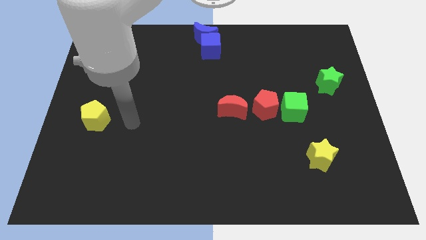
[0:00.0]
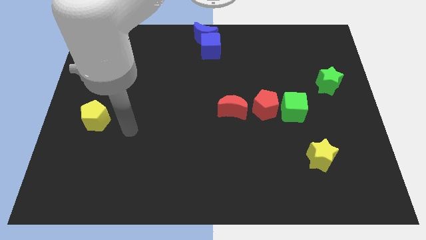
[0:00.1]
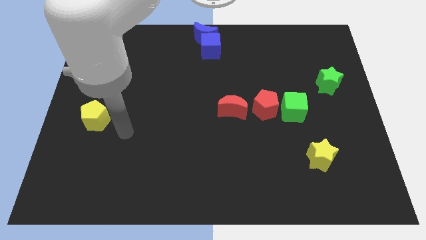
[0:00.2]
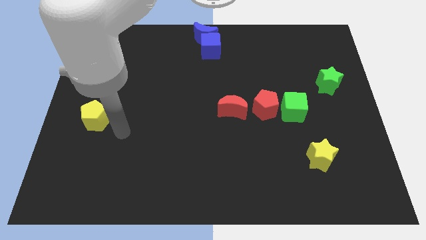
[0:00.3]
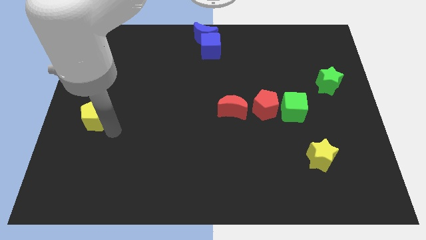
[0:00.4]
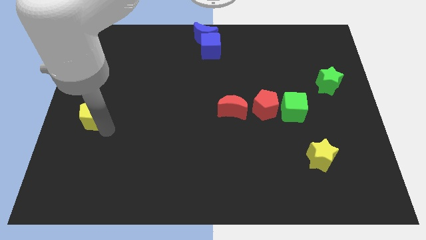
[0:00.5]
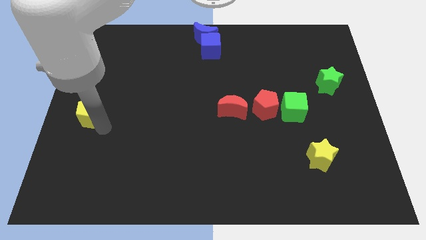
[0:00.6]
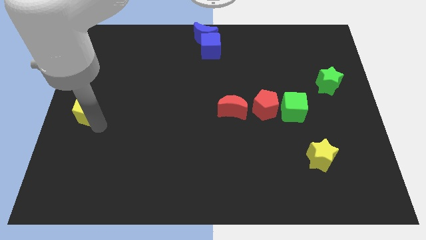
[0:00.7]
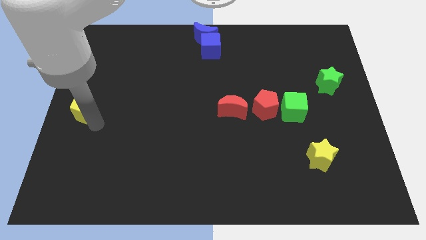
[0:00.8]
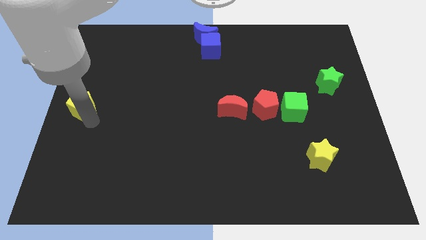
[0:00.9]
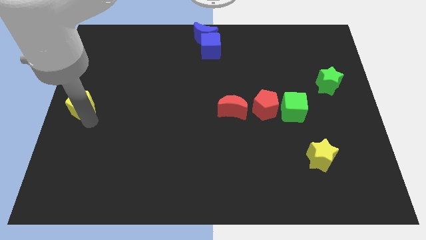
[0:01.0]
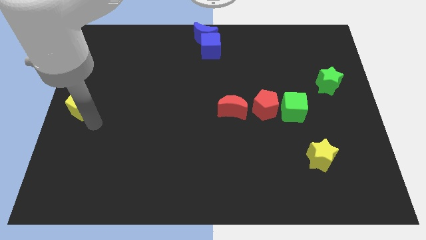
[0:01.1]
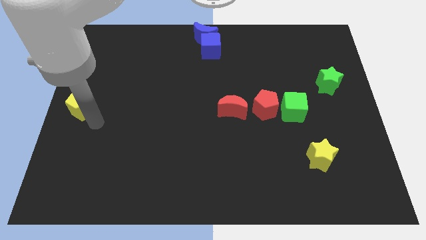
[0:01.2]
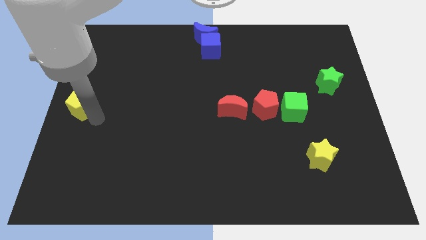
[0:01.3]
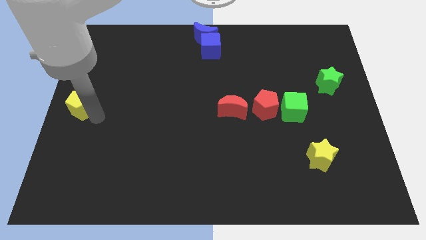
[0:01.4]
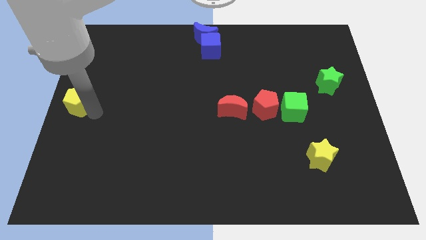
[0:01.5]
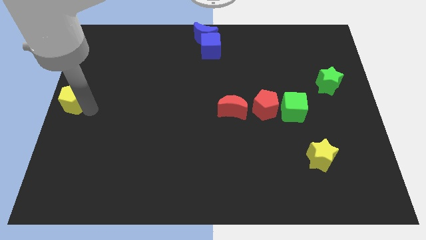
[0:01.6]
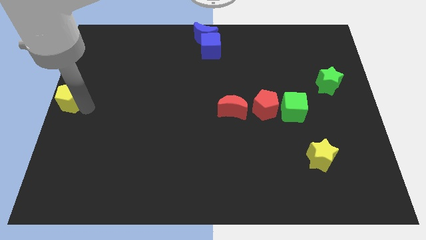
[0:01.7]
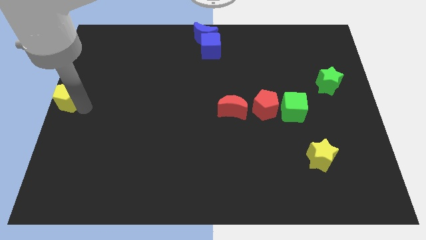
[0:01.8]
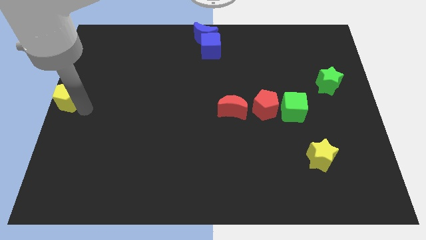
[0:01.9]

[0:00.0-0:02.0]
place the yellow pentagon at the left center of the board

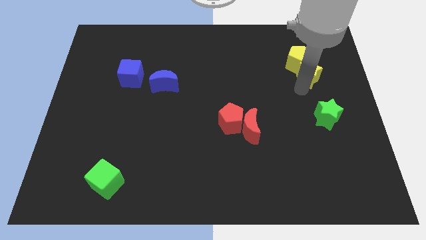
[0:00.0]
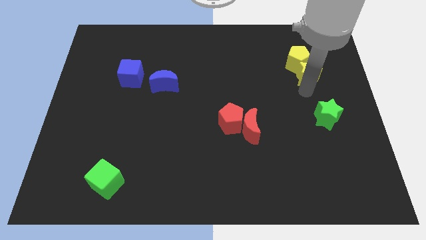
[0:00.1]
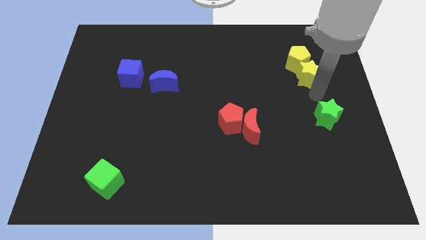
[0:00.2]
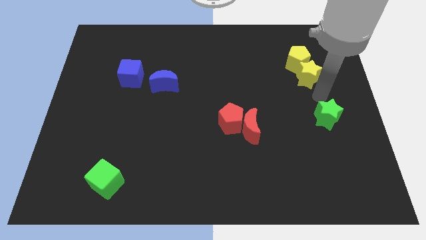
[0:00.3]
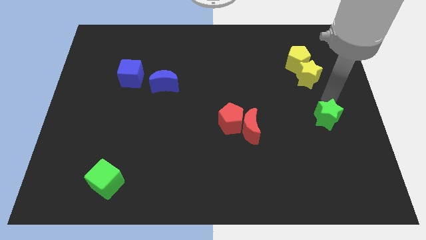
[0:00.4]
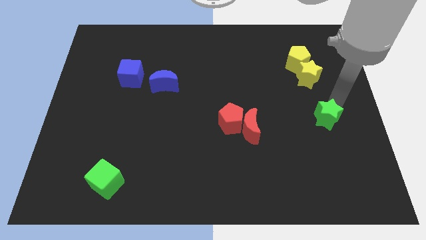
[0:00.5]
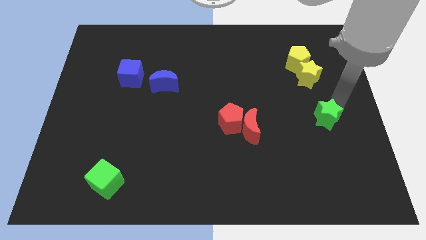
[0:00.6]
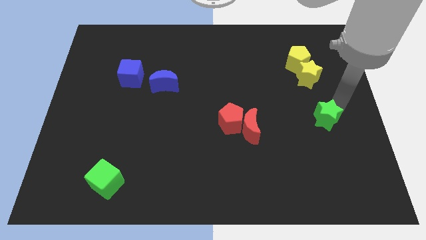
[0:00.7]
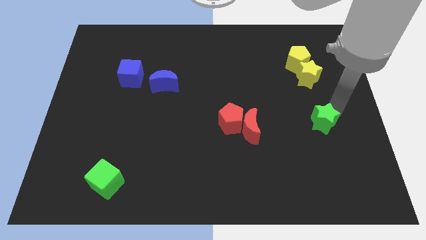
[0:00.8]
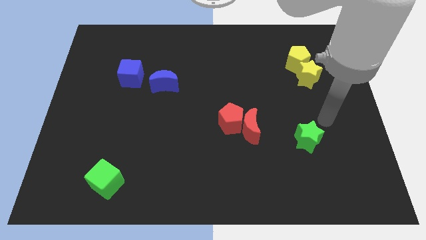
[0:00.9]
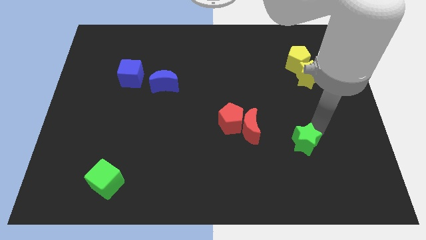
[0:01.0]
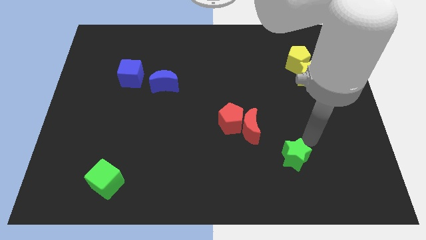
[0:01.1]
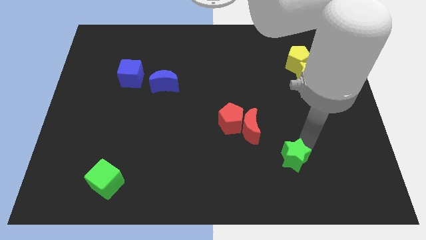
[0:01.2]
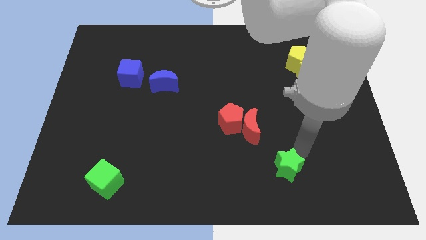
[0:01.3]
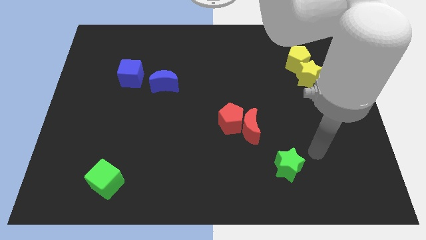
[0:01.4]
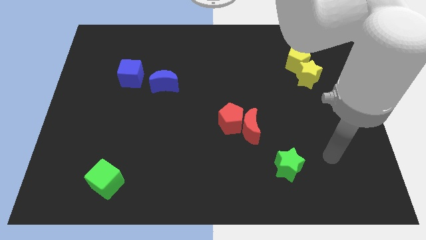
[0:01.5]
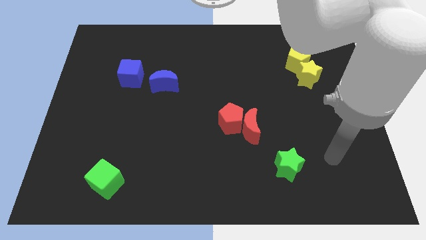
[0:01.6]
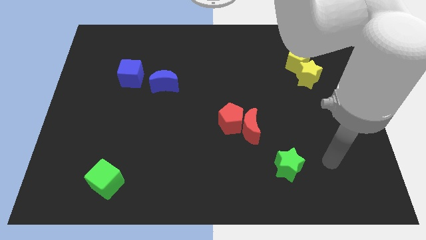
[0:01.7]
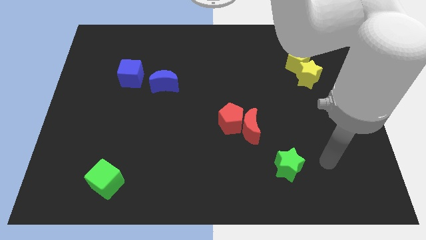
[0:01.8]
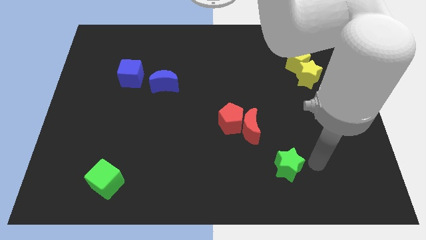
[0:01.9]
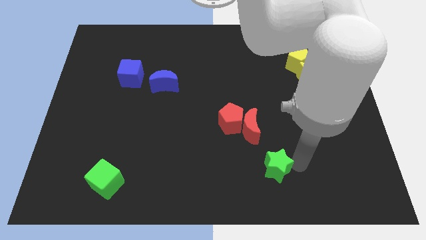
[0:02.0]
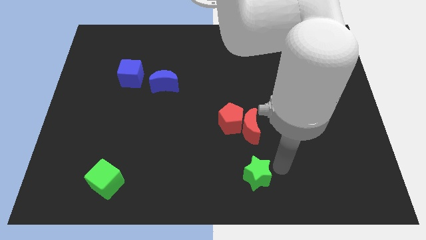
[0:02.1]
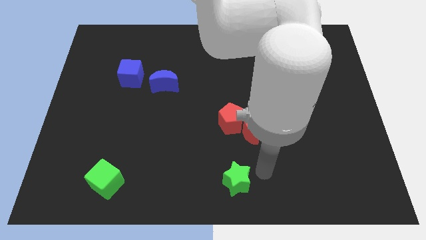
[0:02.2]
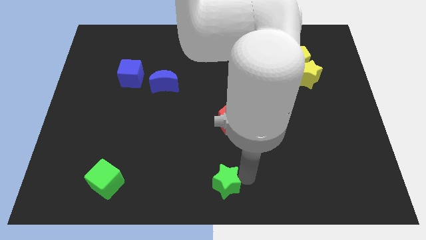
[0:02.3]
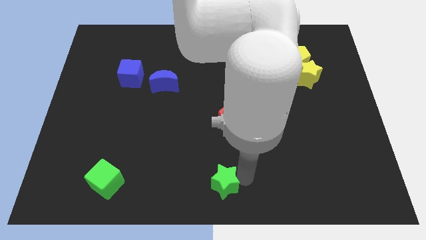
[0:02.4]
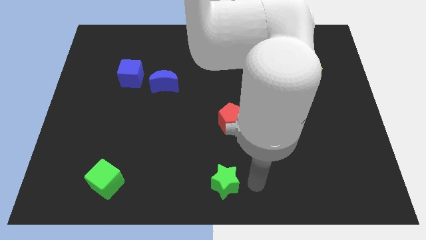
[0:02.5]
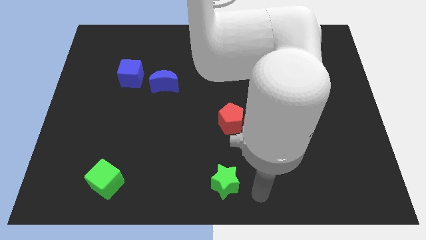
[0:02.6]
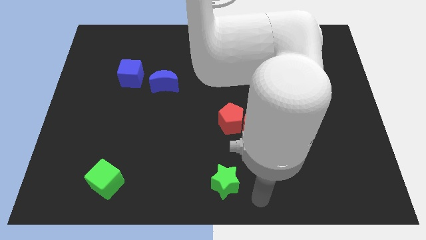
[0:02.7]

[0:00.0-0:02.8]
place the green star vertically at the bottom side of the red pentagon

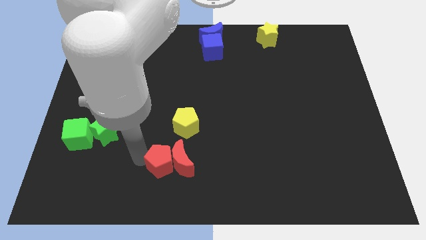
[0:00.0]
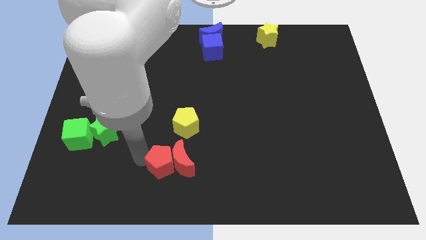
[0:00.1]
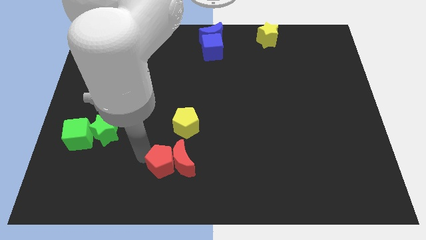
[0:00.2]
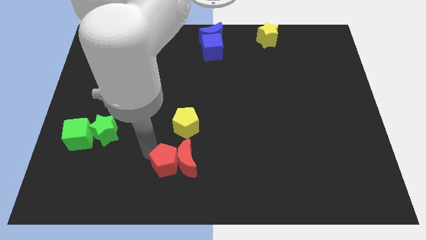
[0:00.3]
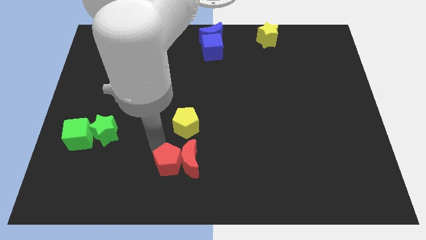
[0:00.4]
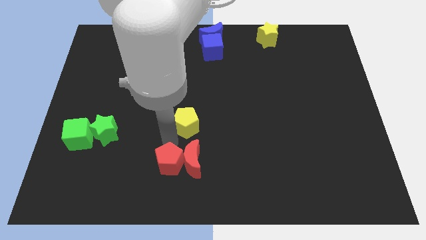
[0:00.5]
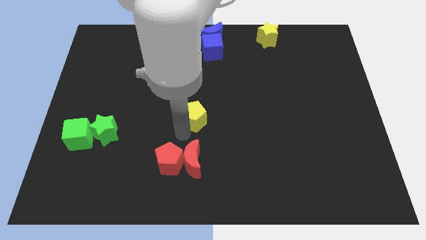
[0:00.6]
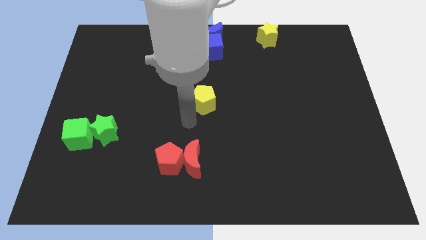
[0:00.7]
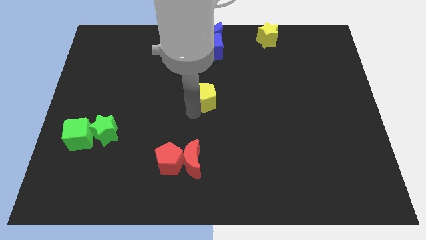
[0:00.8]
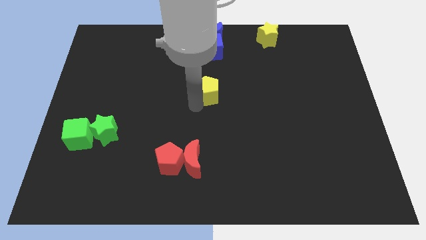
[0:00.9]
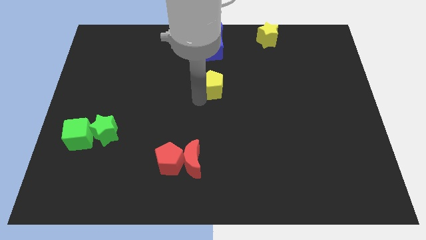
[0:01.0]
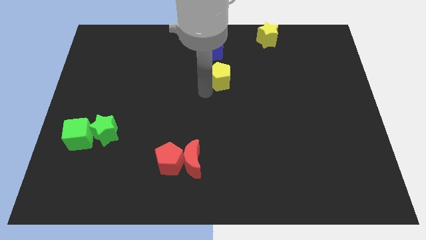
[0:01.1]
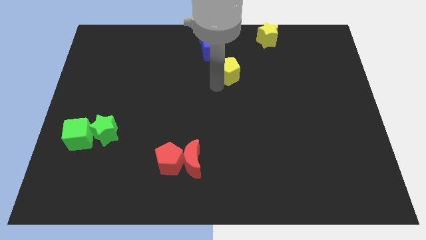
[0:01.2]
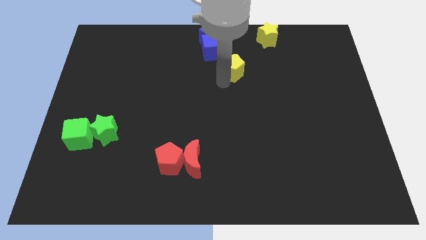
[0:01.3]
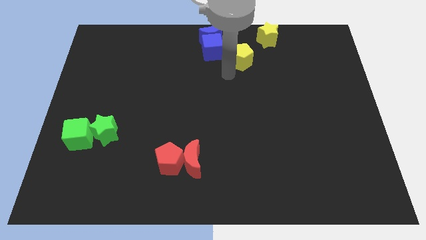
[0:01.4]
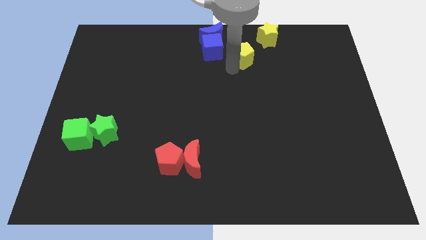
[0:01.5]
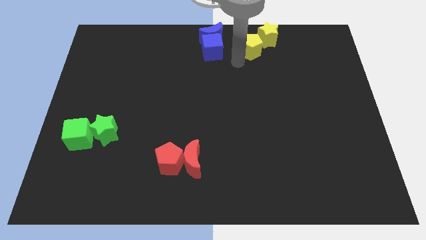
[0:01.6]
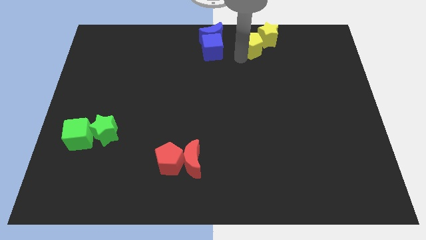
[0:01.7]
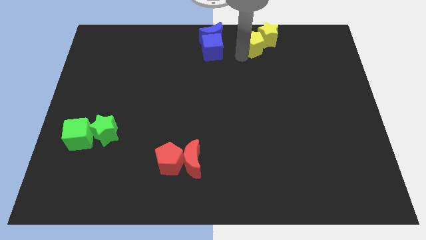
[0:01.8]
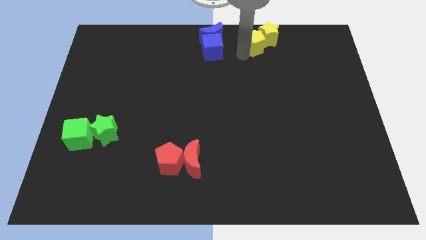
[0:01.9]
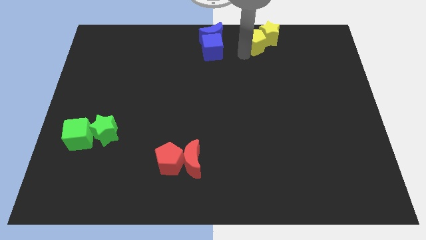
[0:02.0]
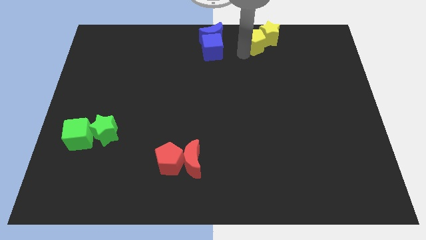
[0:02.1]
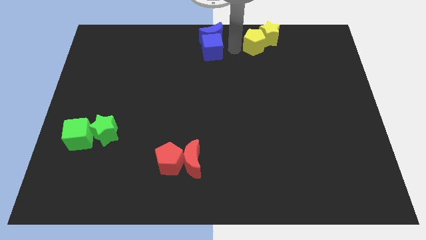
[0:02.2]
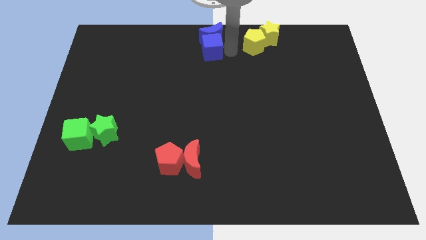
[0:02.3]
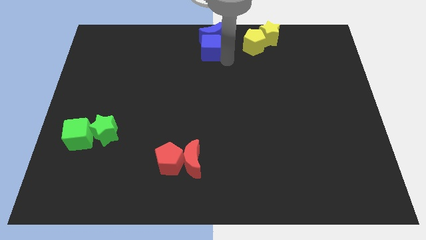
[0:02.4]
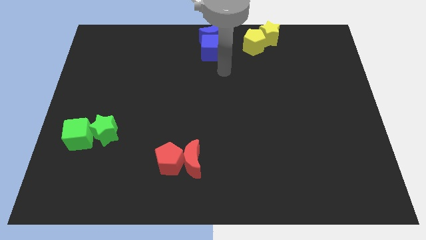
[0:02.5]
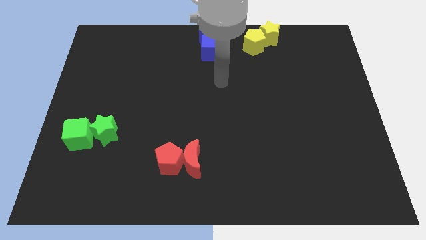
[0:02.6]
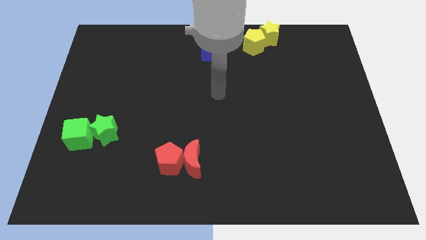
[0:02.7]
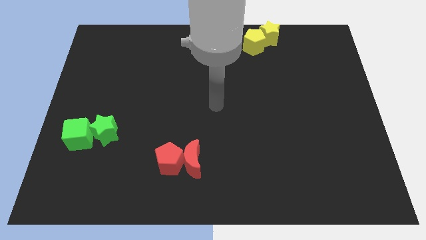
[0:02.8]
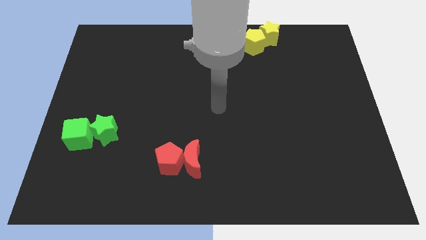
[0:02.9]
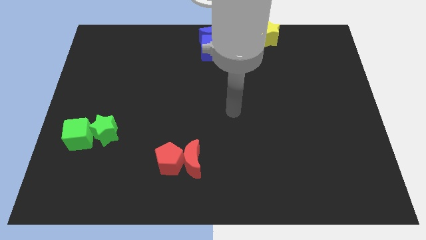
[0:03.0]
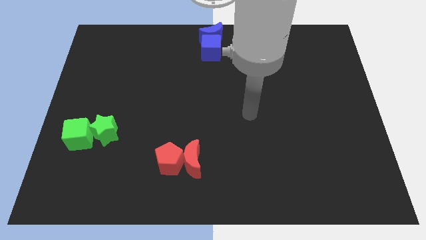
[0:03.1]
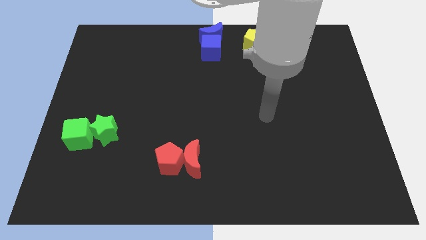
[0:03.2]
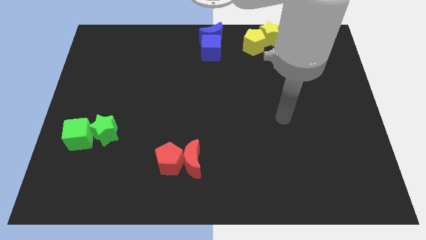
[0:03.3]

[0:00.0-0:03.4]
move yellow pentagon towards yellow star

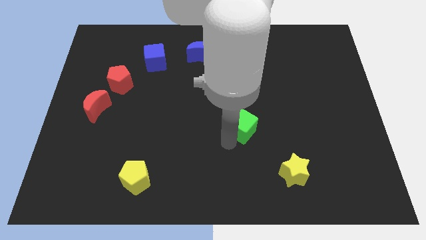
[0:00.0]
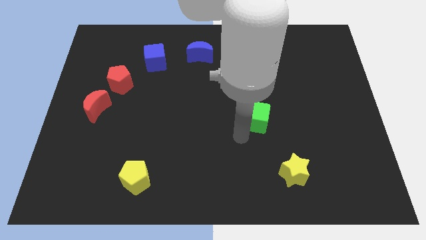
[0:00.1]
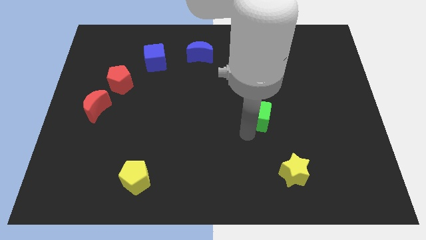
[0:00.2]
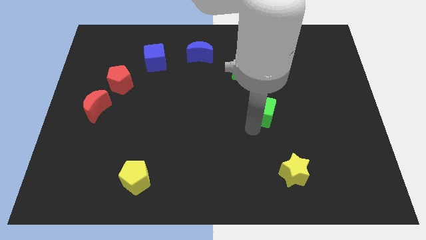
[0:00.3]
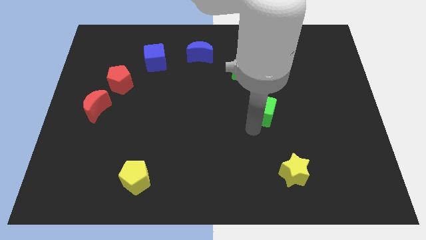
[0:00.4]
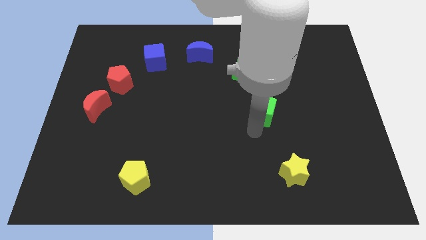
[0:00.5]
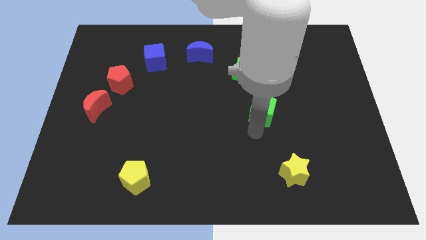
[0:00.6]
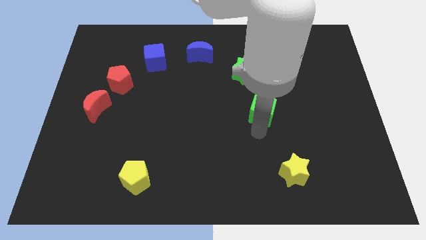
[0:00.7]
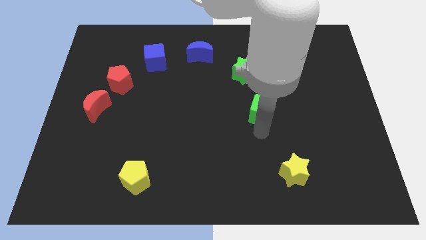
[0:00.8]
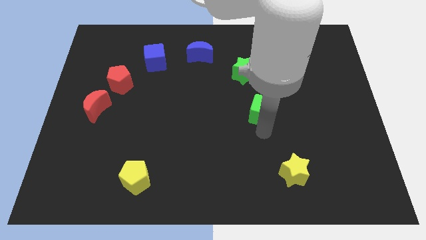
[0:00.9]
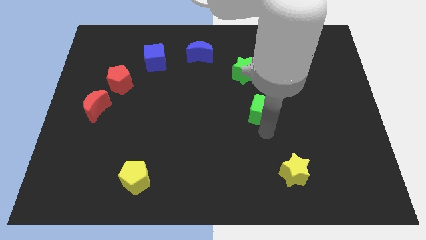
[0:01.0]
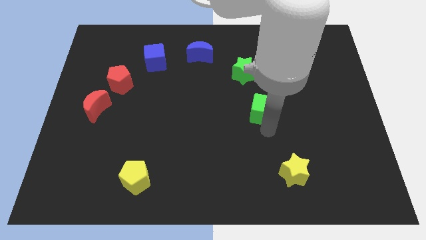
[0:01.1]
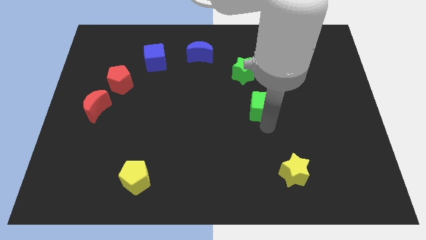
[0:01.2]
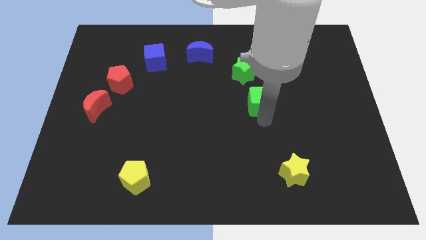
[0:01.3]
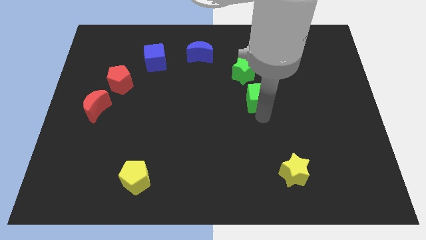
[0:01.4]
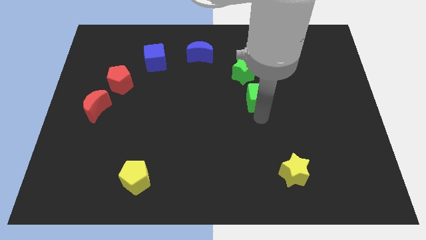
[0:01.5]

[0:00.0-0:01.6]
place the green cube below the green star
